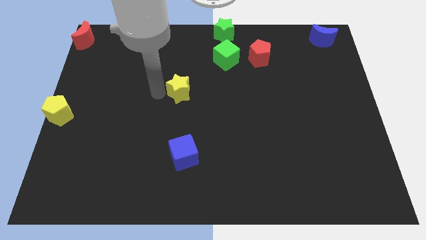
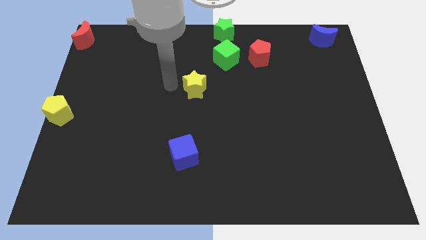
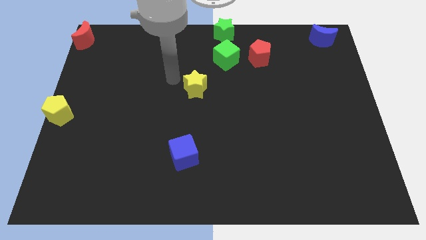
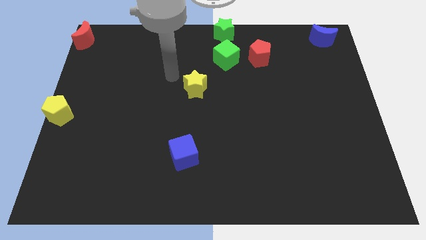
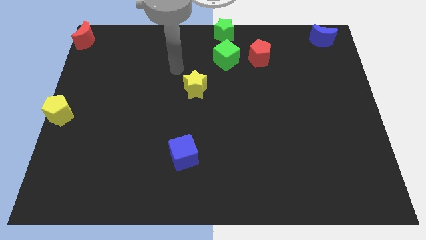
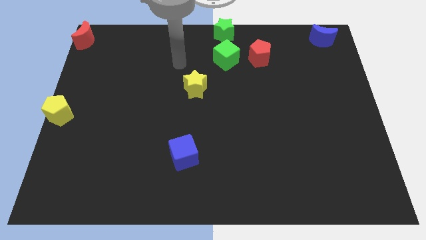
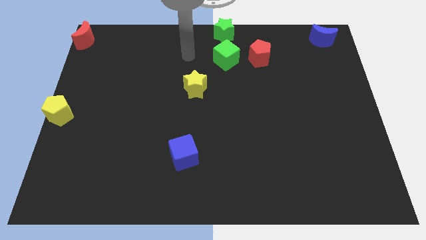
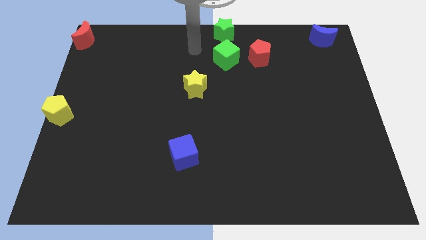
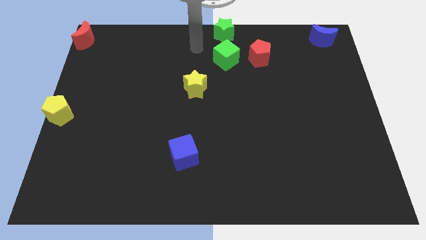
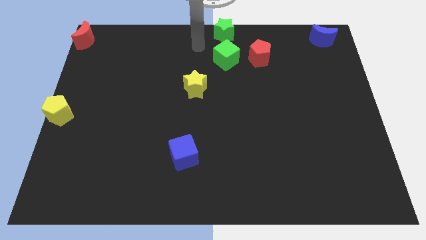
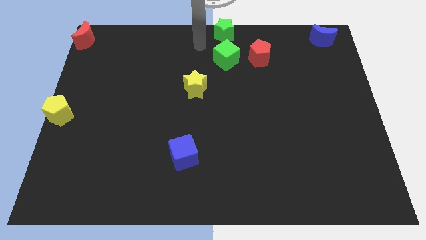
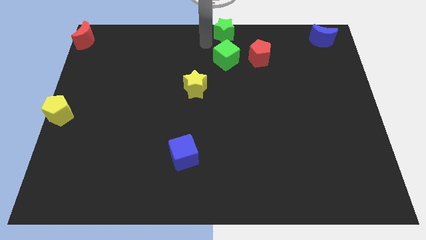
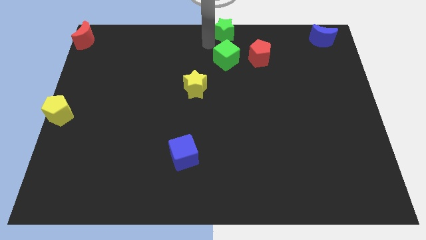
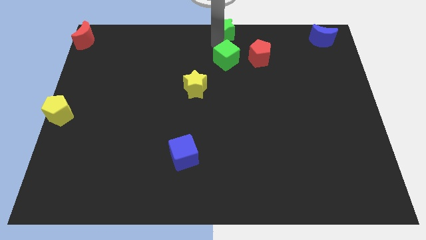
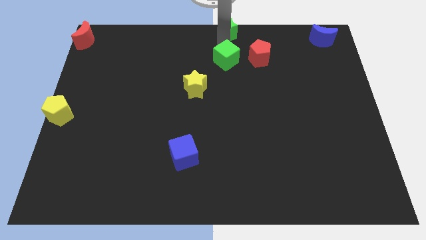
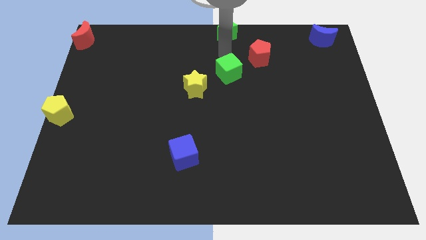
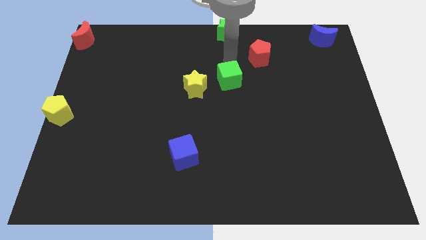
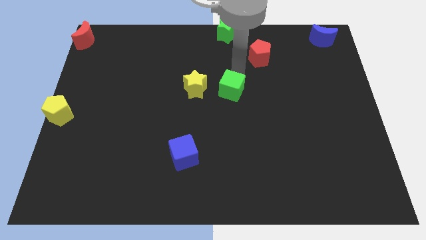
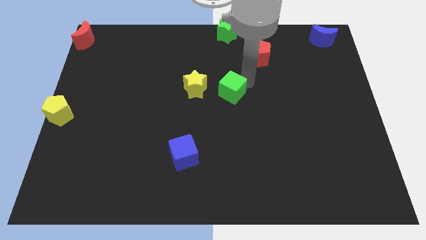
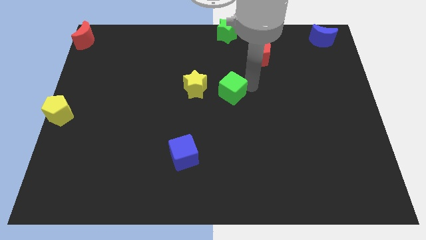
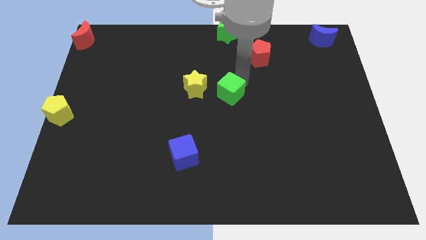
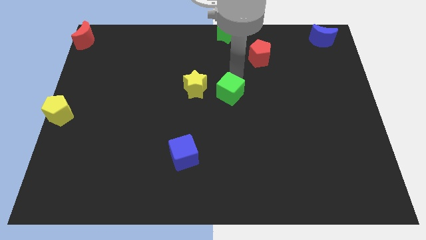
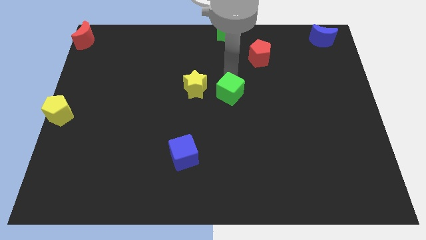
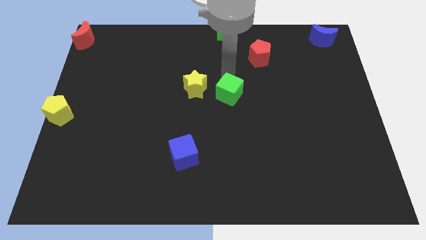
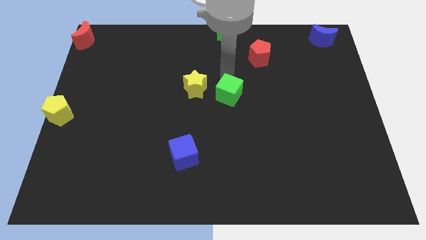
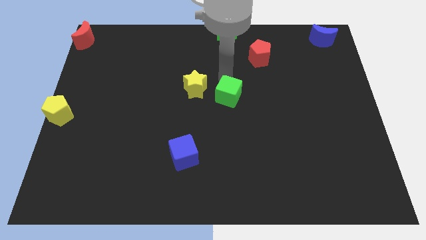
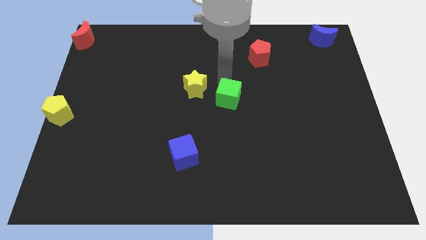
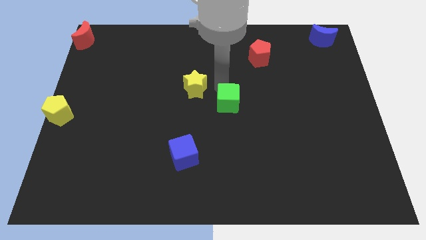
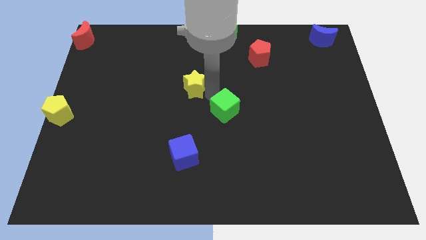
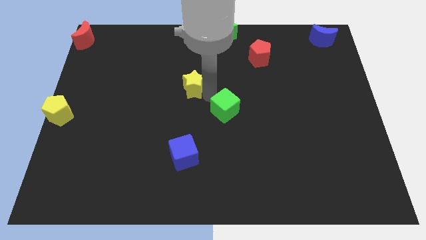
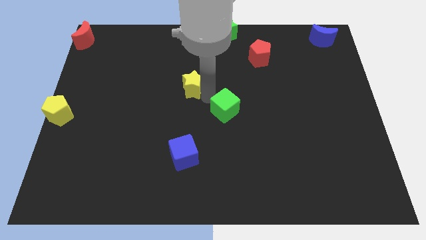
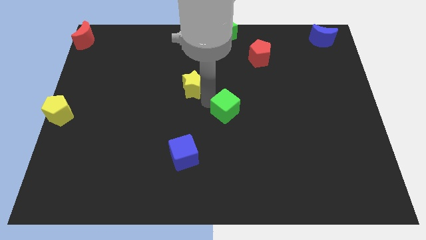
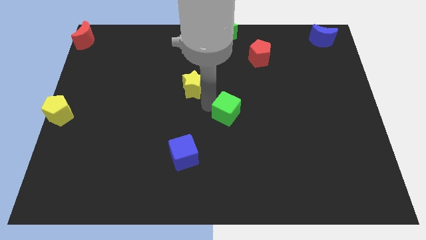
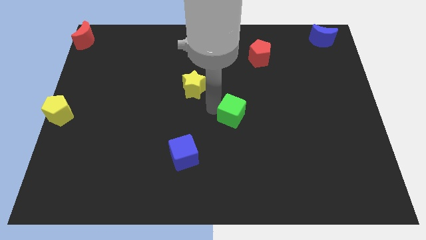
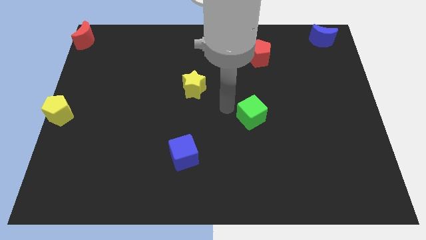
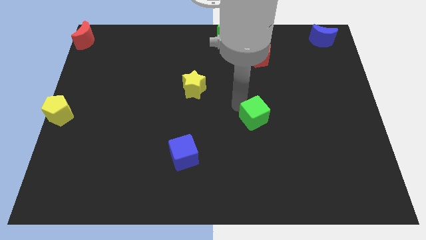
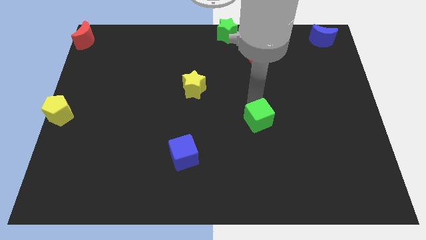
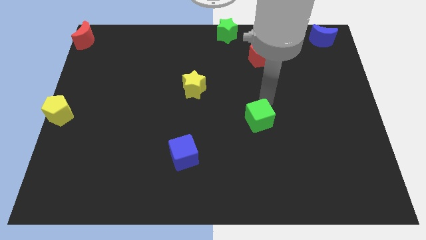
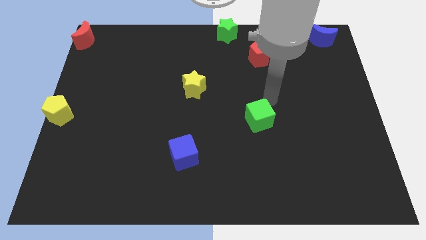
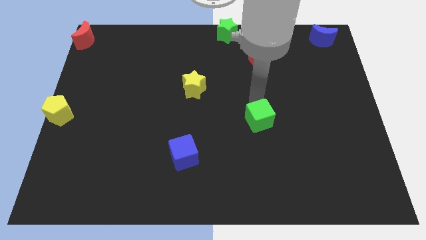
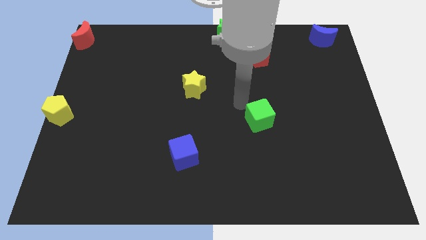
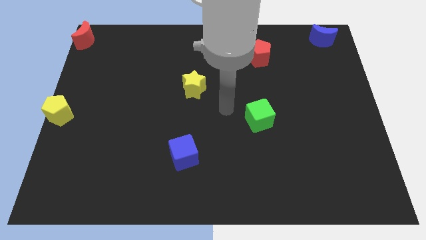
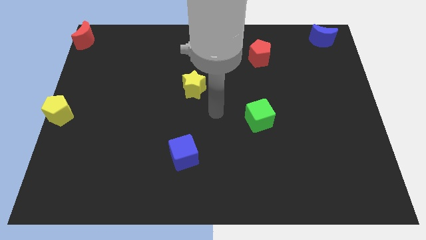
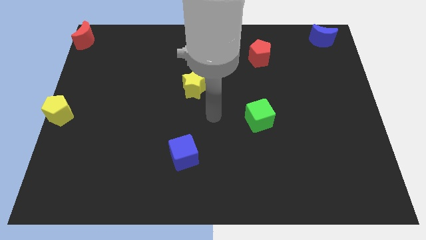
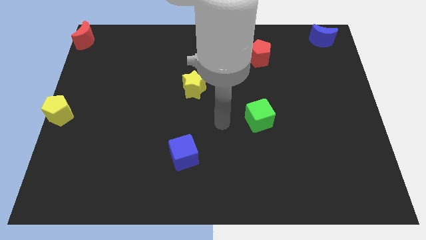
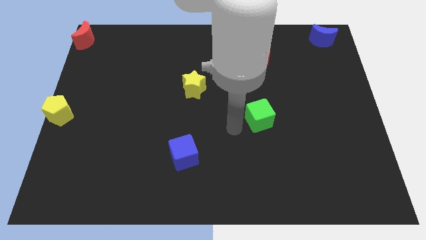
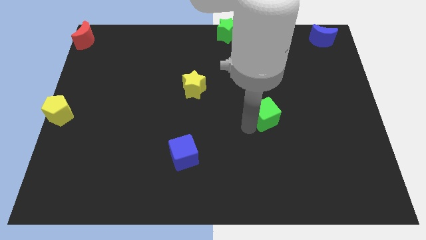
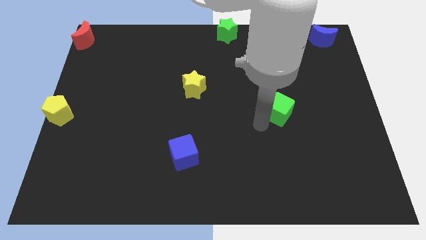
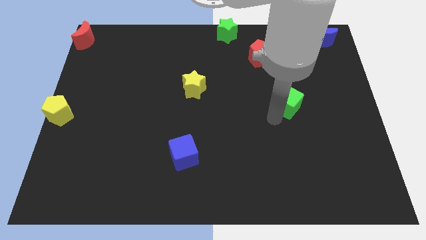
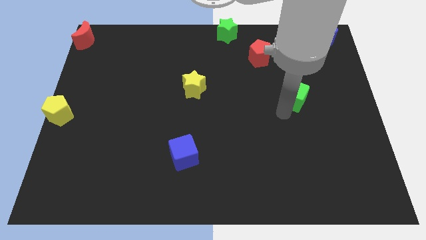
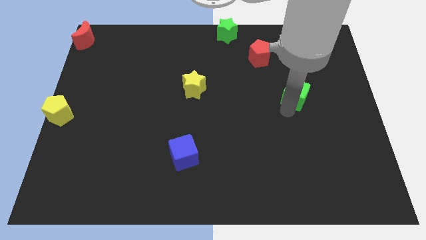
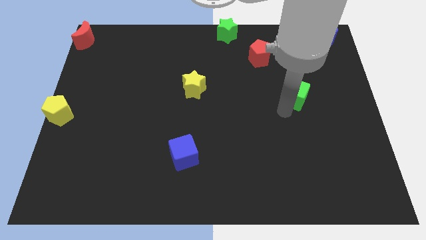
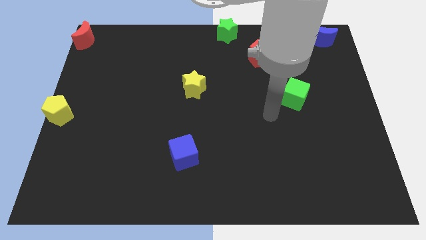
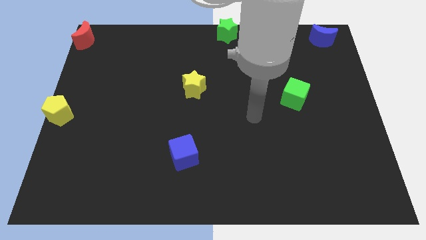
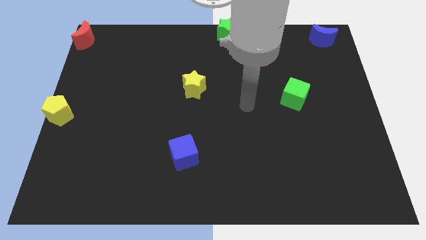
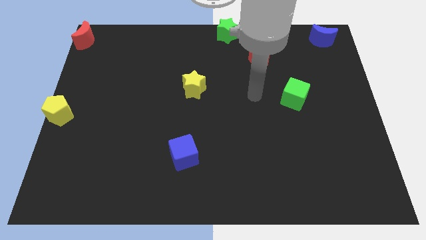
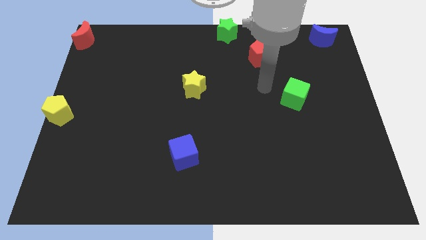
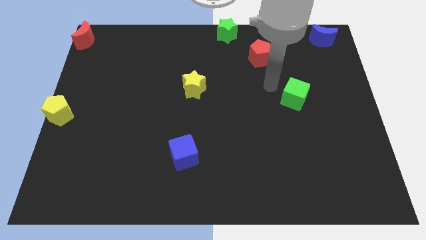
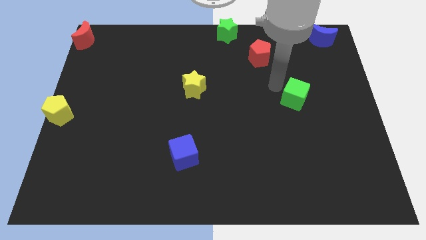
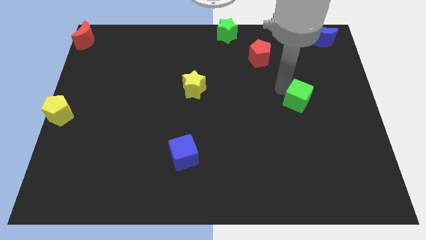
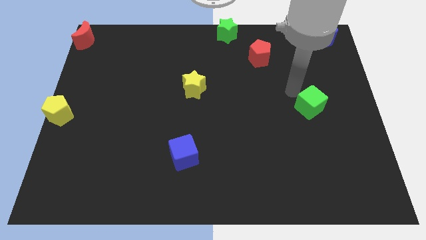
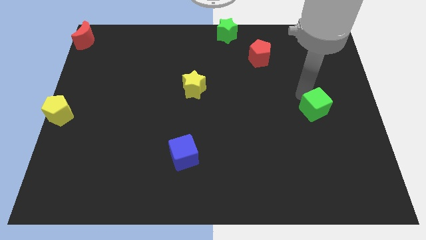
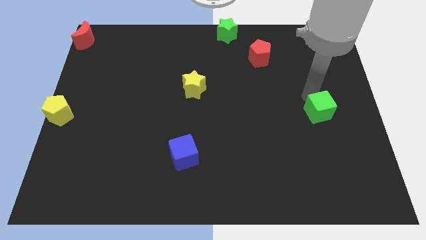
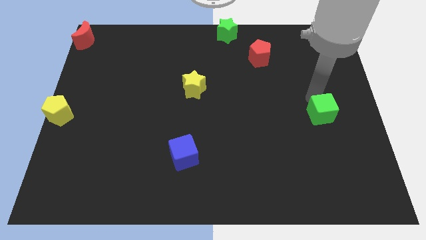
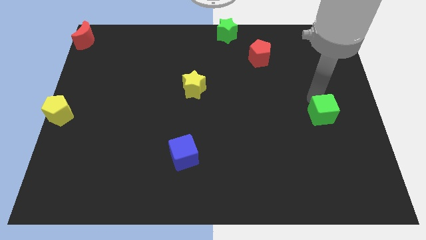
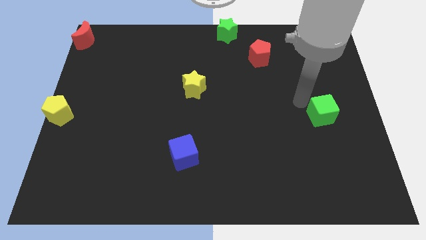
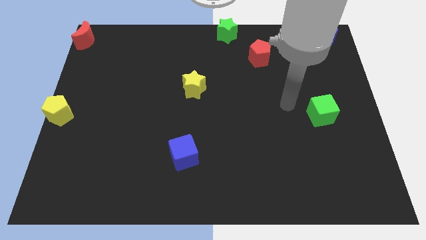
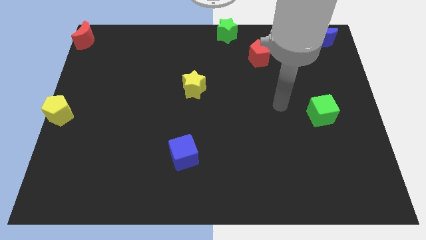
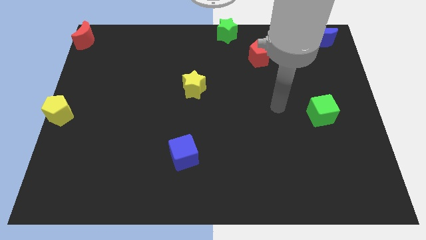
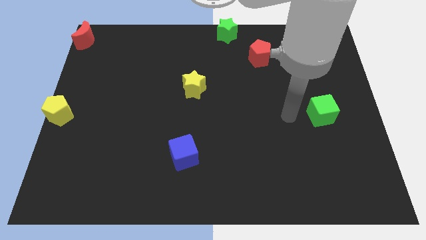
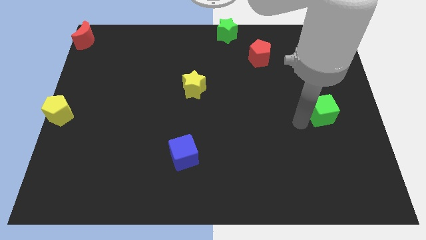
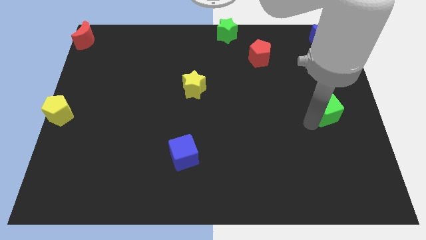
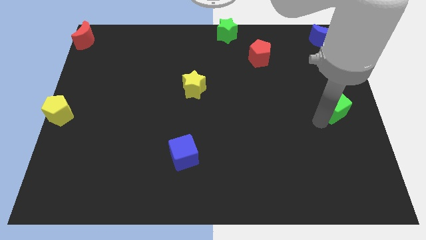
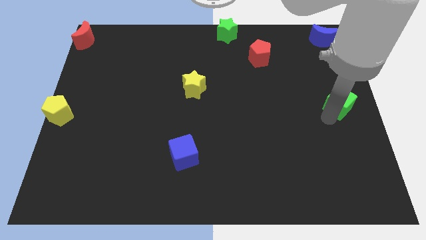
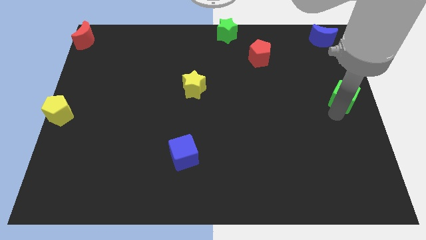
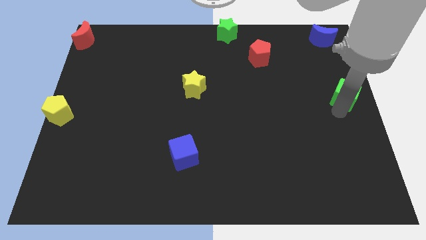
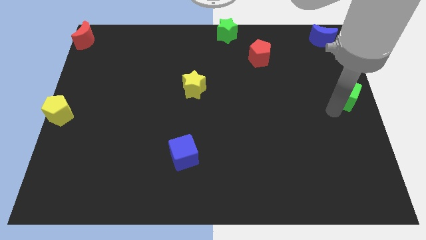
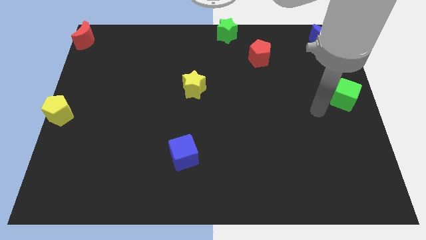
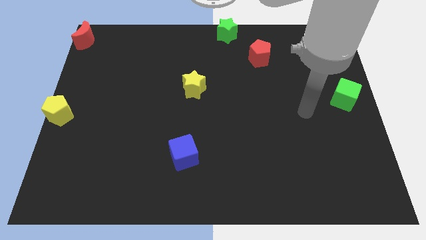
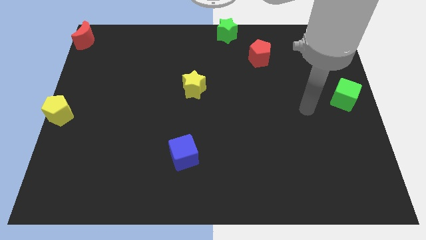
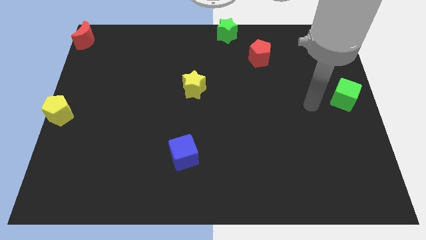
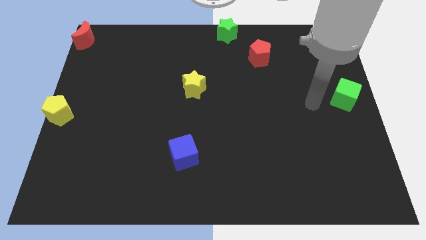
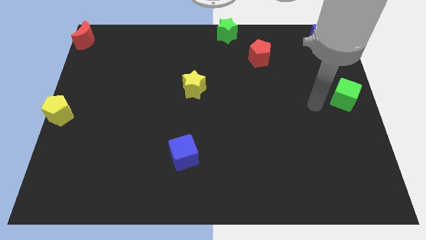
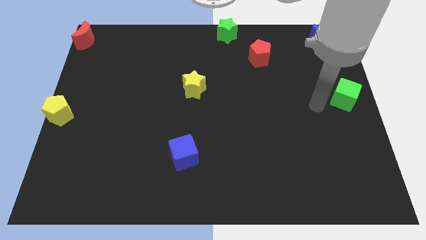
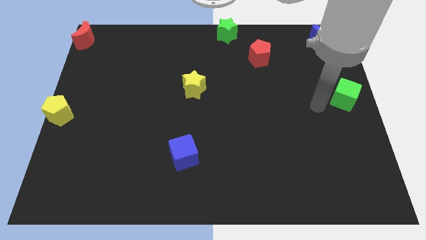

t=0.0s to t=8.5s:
slide the green cube to the center right of the board

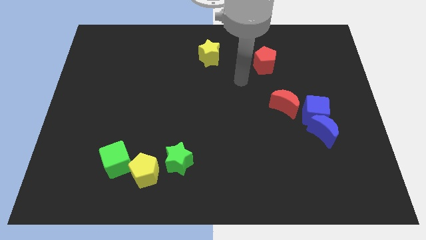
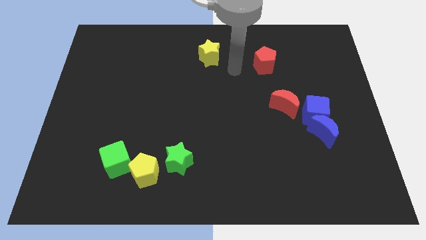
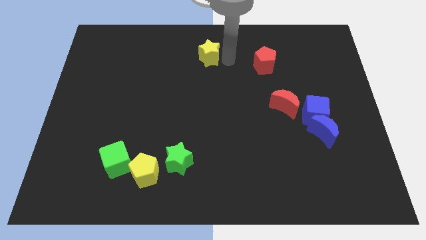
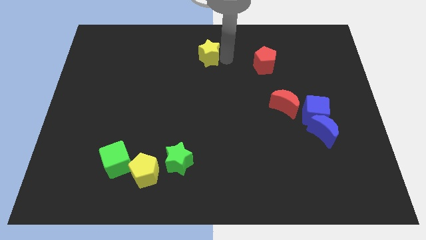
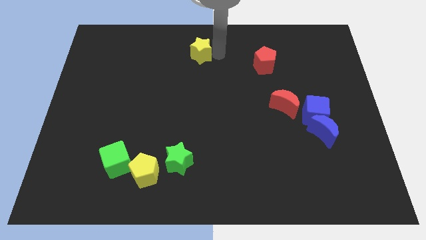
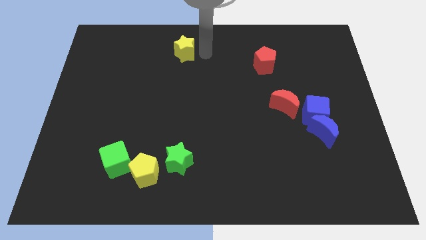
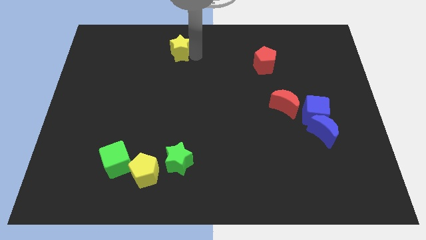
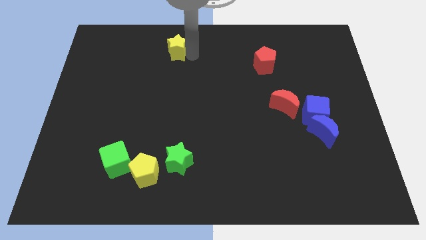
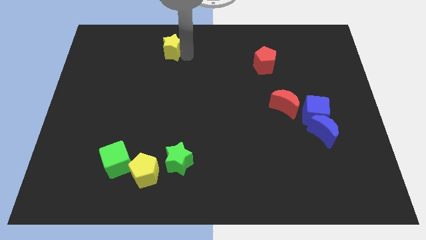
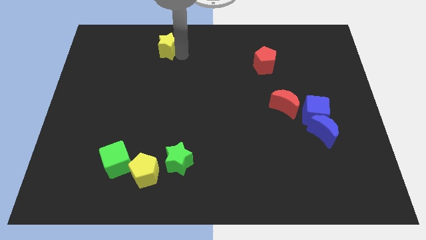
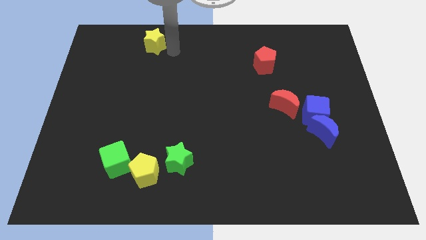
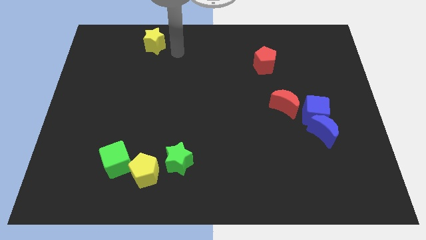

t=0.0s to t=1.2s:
put the yellow star vertically at the top of the yellow pentagon
